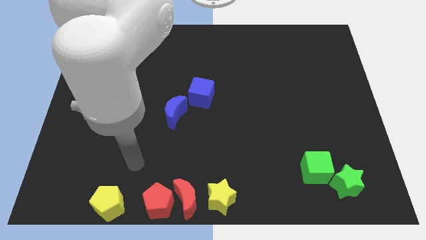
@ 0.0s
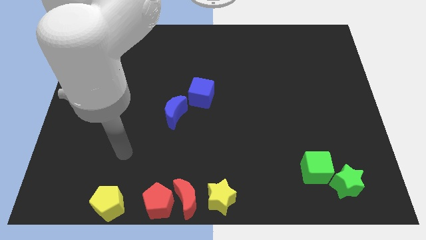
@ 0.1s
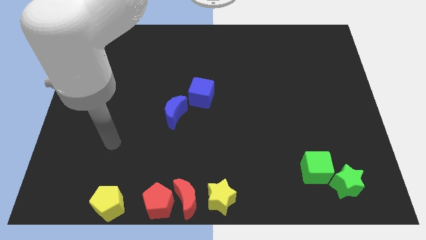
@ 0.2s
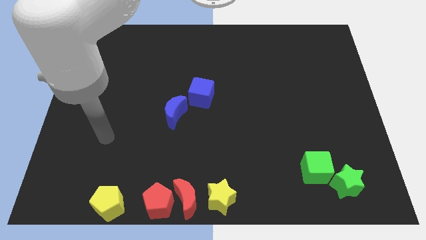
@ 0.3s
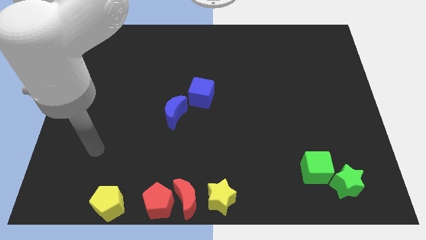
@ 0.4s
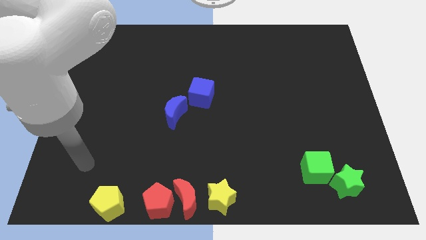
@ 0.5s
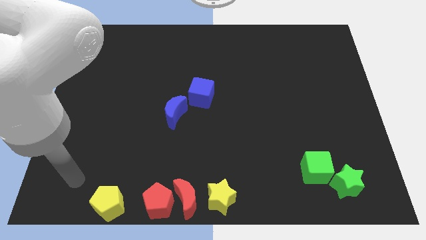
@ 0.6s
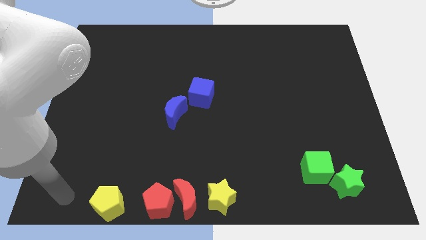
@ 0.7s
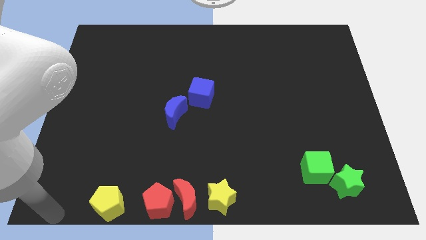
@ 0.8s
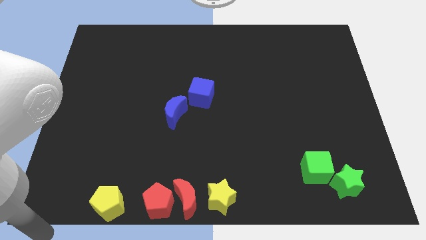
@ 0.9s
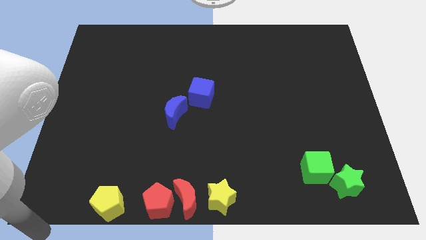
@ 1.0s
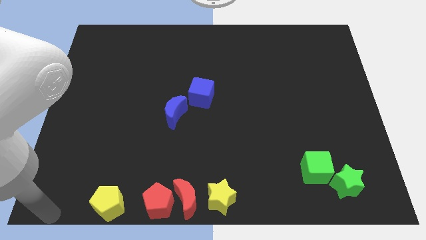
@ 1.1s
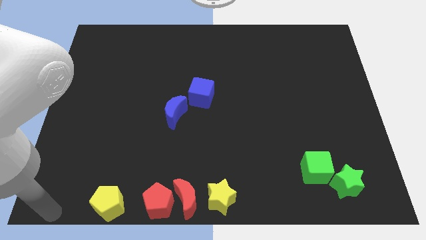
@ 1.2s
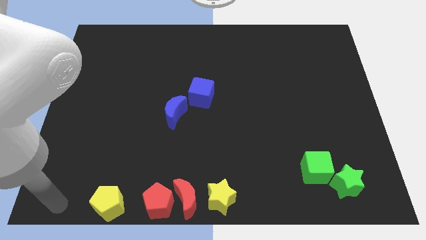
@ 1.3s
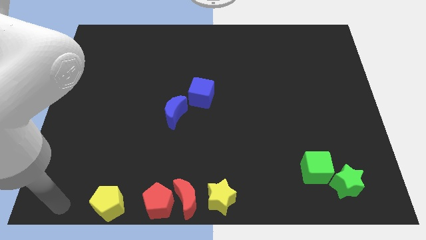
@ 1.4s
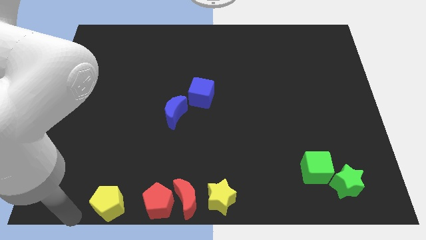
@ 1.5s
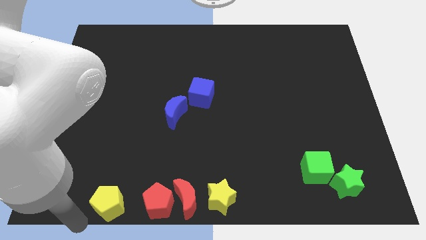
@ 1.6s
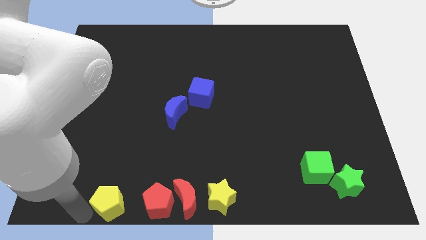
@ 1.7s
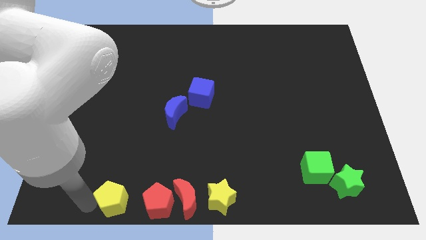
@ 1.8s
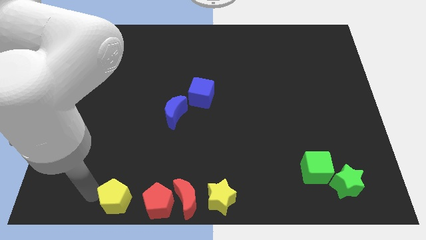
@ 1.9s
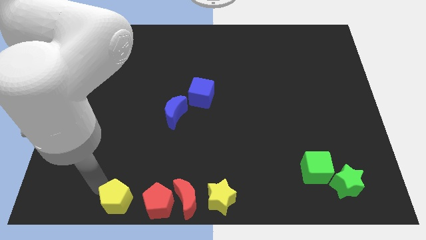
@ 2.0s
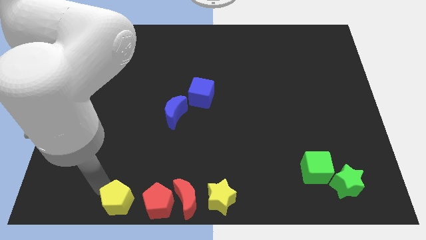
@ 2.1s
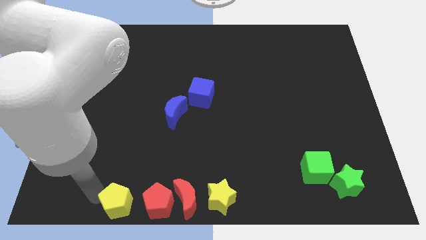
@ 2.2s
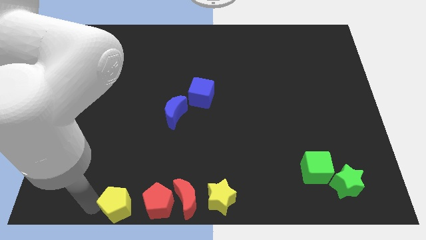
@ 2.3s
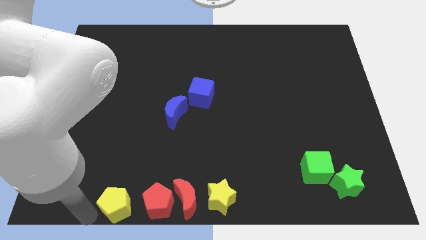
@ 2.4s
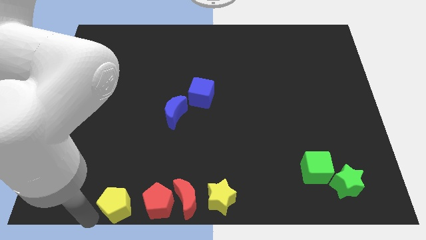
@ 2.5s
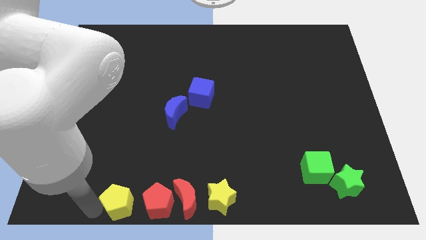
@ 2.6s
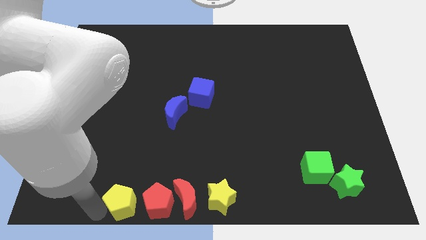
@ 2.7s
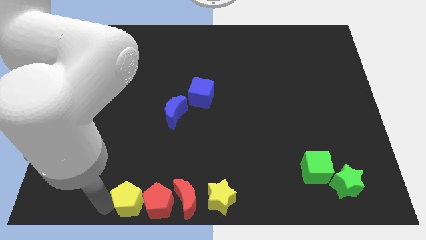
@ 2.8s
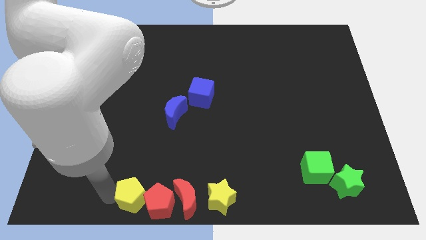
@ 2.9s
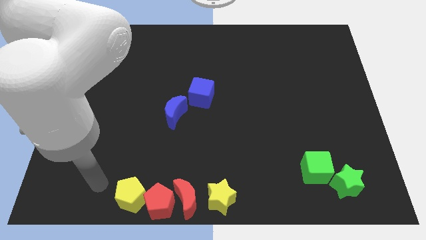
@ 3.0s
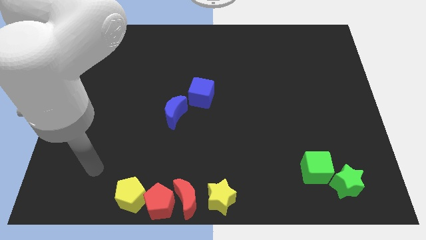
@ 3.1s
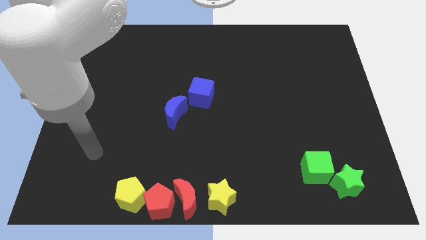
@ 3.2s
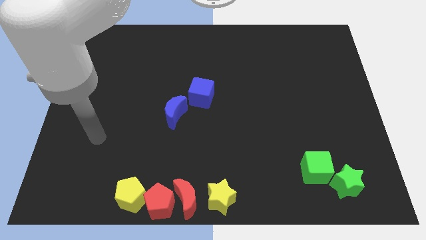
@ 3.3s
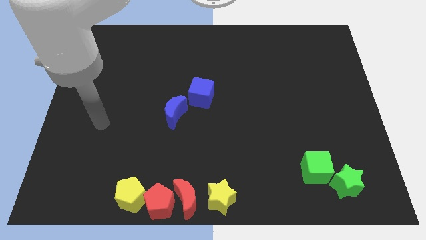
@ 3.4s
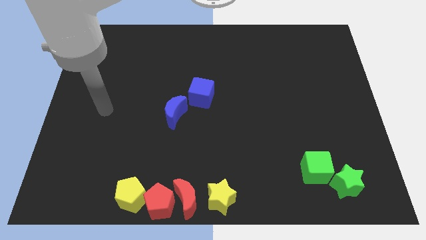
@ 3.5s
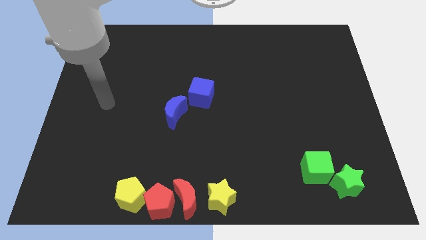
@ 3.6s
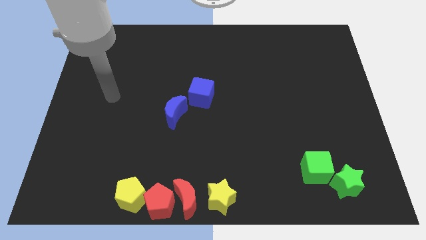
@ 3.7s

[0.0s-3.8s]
move the yellow pentagon into the red pentagon

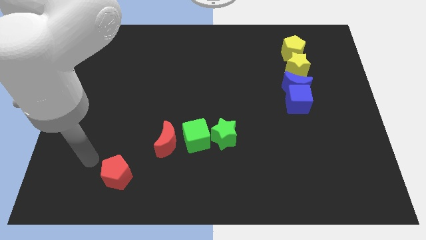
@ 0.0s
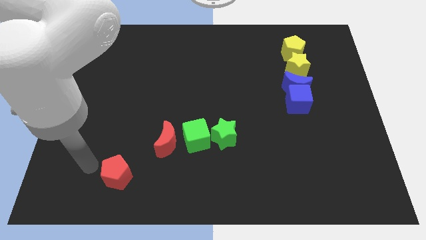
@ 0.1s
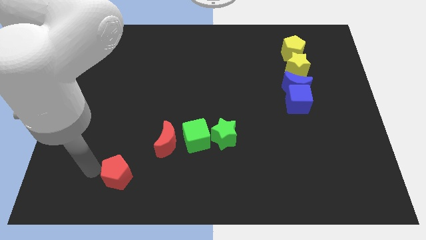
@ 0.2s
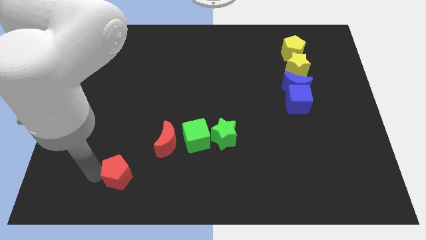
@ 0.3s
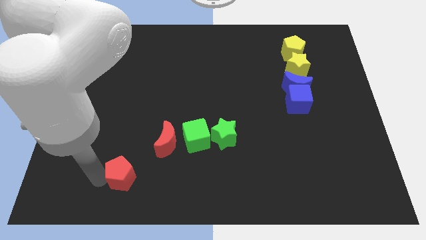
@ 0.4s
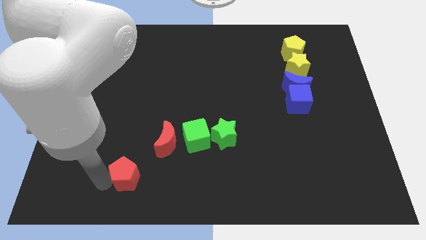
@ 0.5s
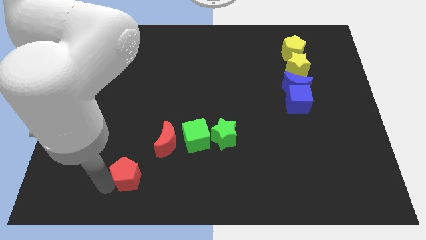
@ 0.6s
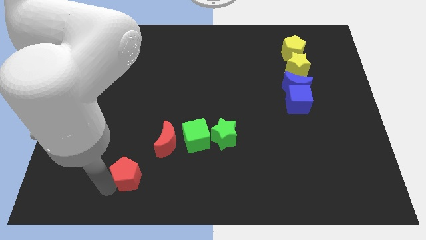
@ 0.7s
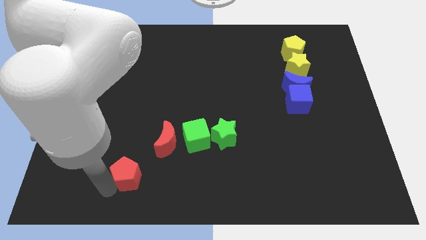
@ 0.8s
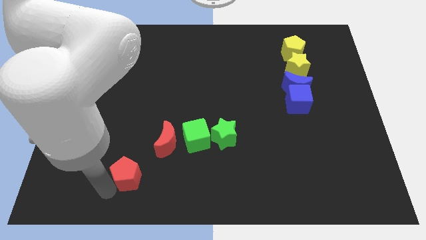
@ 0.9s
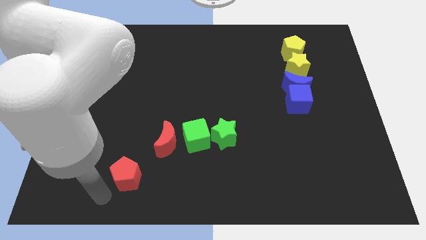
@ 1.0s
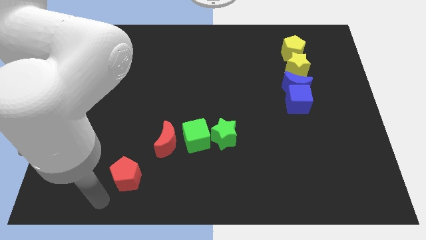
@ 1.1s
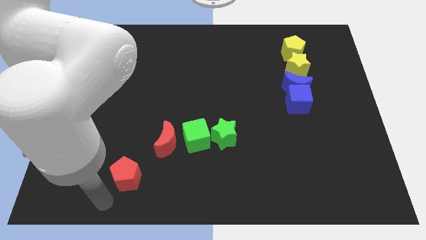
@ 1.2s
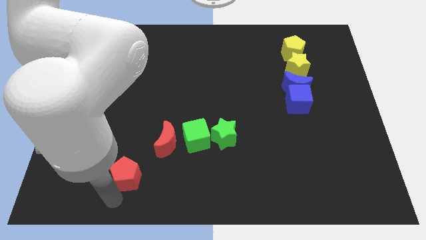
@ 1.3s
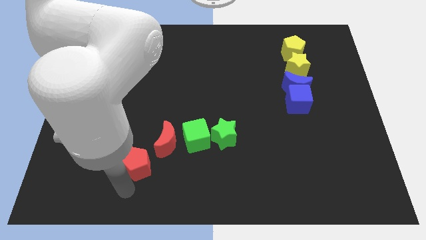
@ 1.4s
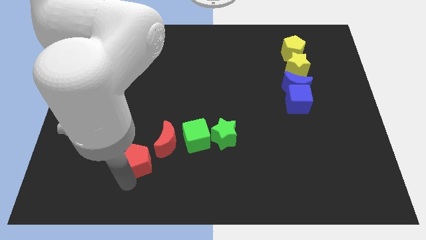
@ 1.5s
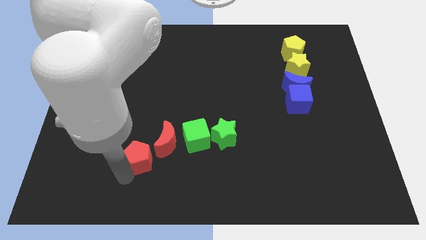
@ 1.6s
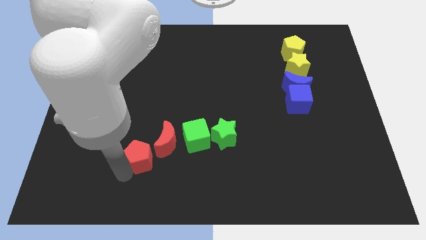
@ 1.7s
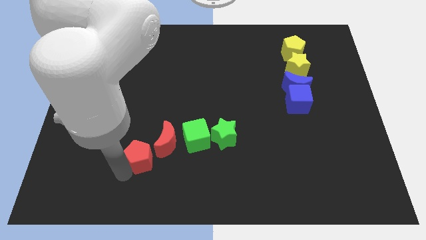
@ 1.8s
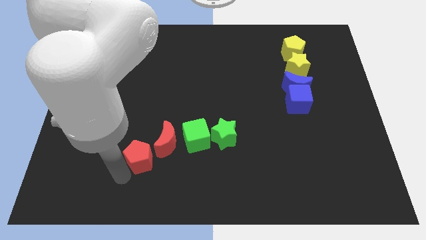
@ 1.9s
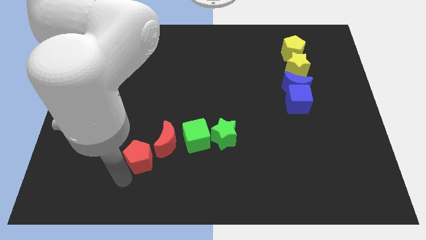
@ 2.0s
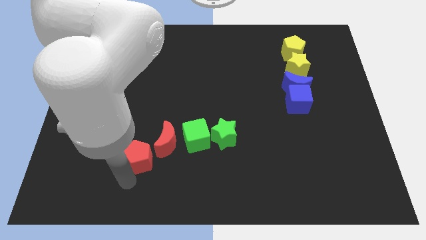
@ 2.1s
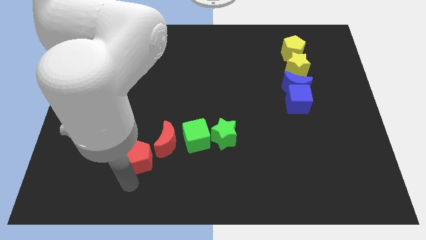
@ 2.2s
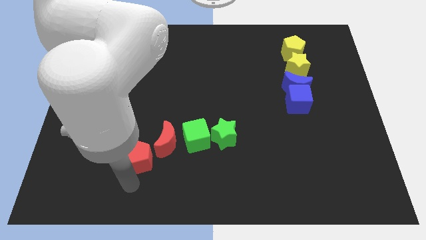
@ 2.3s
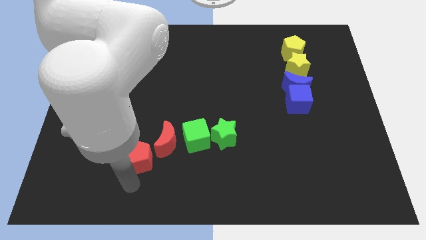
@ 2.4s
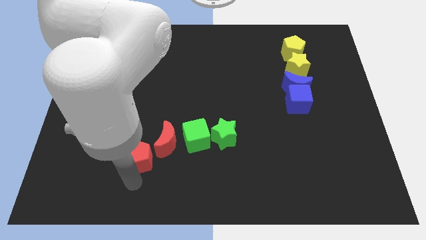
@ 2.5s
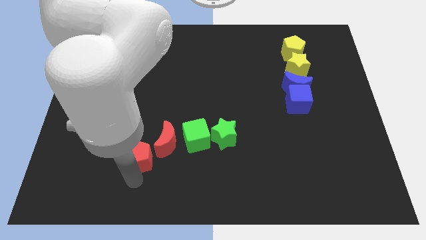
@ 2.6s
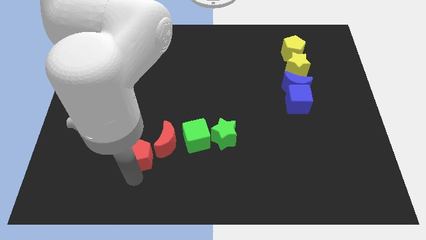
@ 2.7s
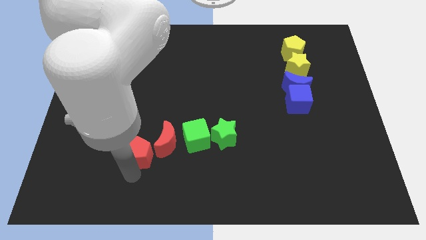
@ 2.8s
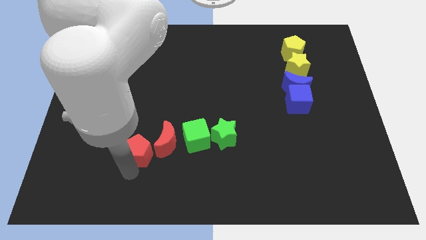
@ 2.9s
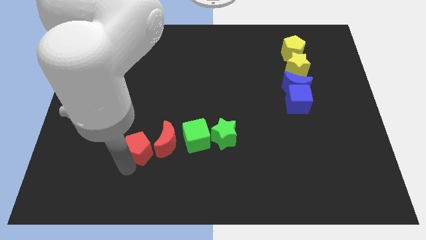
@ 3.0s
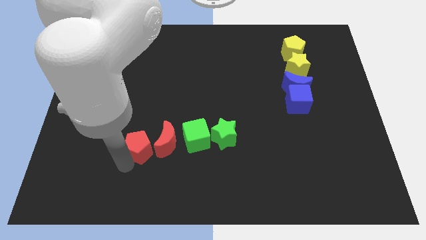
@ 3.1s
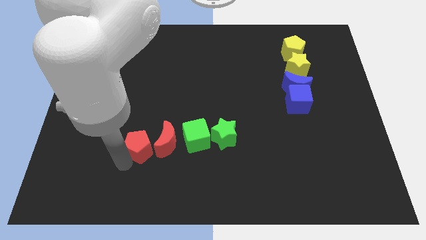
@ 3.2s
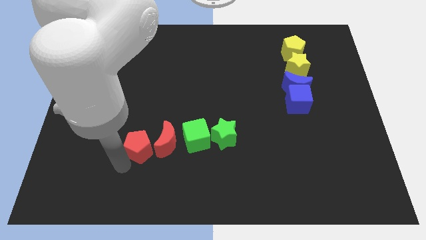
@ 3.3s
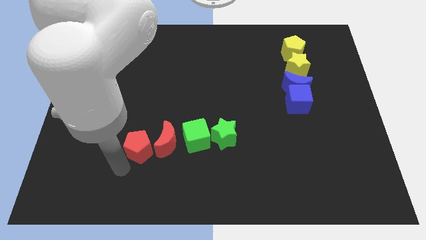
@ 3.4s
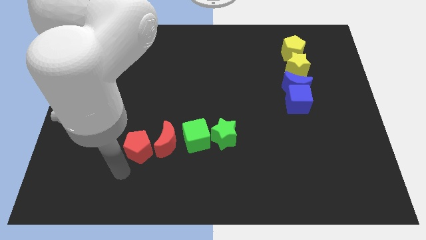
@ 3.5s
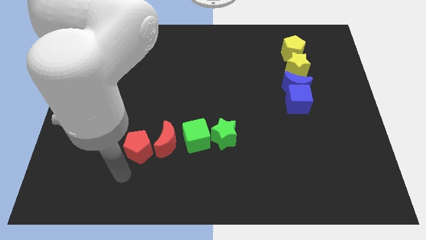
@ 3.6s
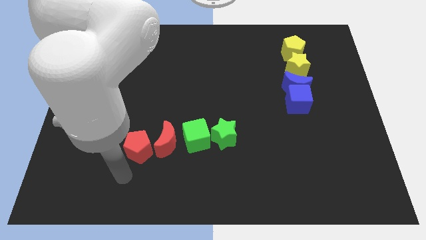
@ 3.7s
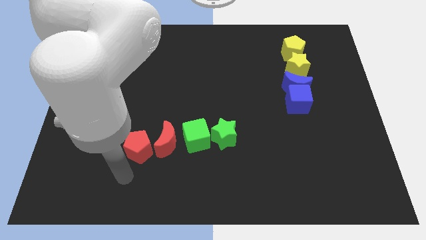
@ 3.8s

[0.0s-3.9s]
place the red pentagon to the left side of the red moon

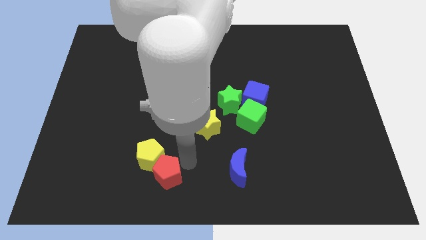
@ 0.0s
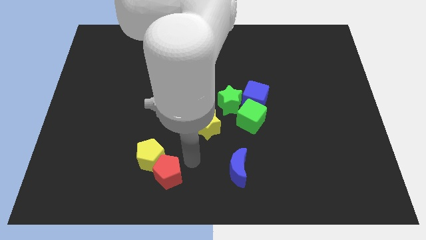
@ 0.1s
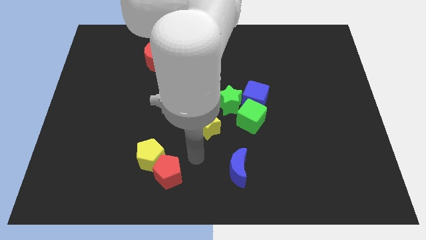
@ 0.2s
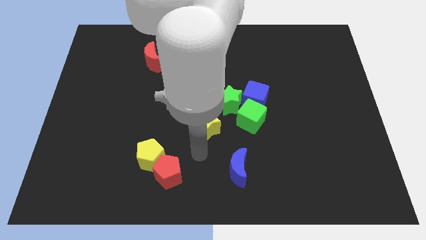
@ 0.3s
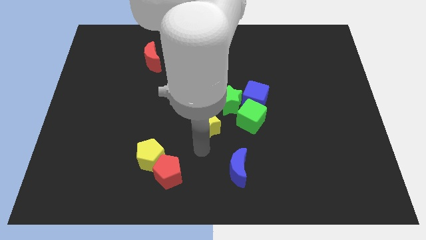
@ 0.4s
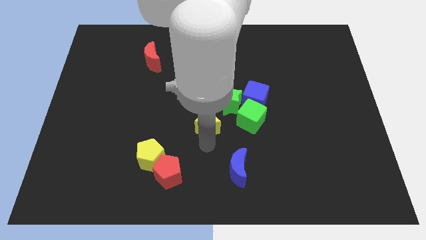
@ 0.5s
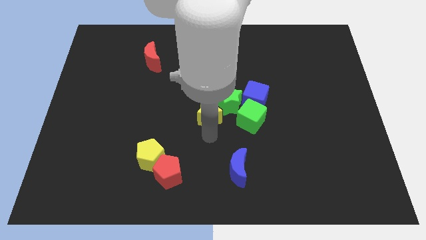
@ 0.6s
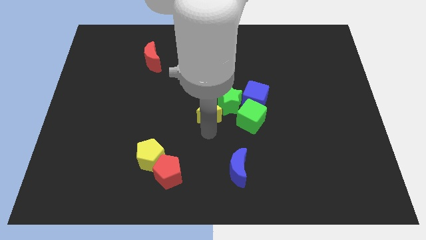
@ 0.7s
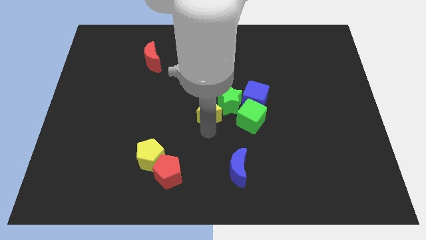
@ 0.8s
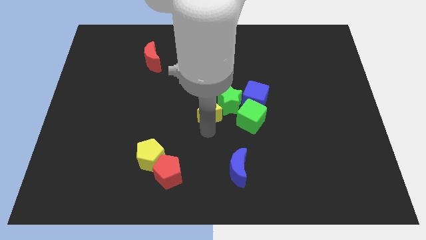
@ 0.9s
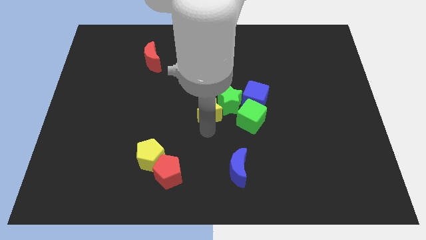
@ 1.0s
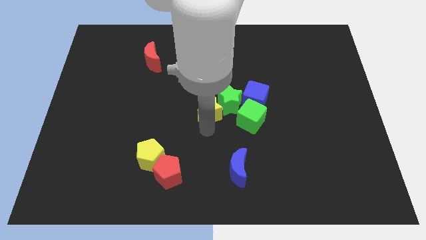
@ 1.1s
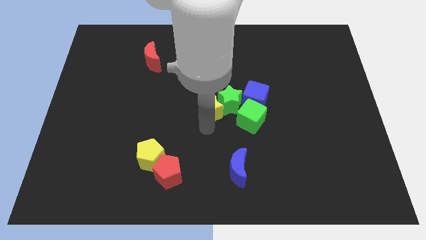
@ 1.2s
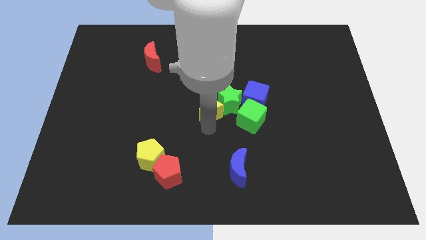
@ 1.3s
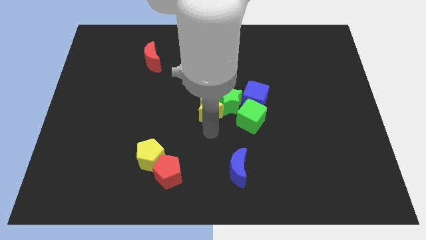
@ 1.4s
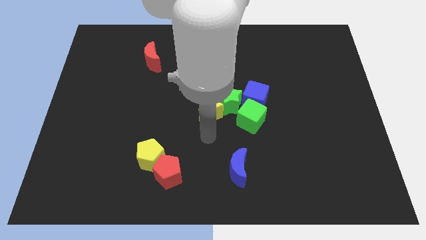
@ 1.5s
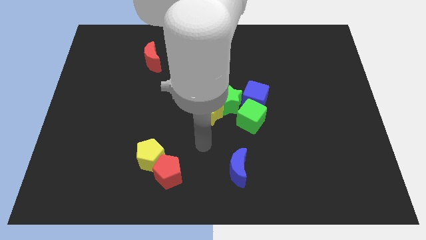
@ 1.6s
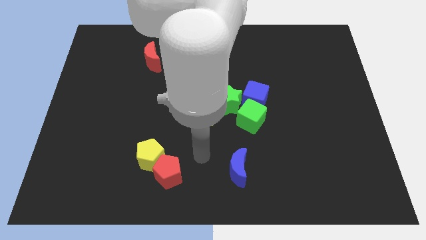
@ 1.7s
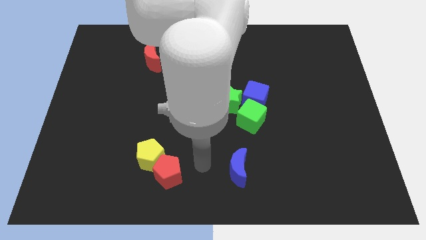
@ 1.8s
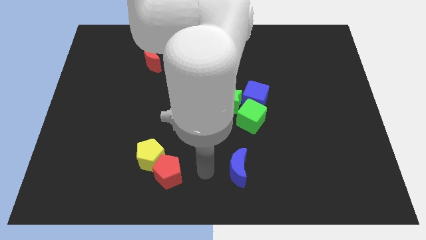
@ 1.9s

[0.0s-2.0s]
place your arm in between the red pentagon and blue moon
